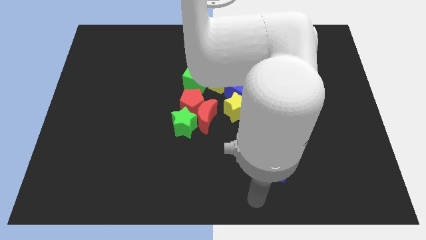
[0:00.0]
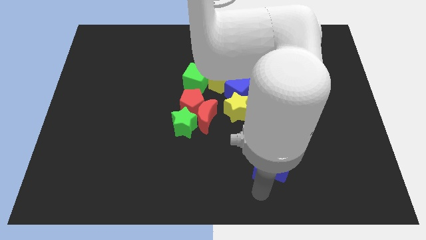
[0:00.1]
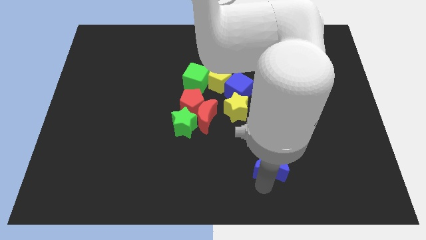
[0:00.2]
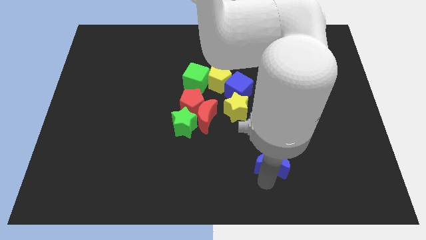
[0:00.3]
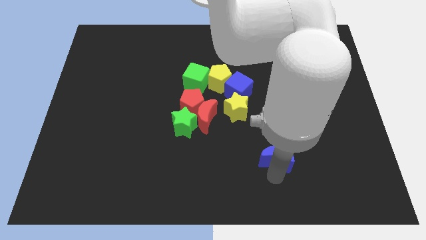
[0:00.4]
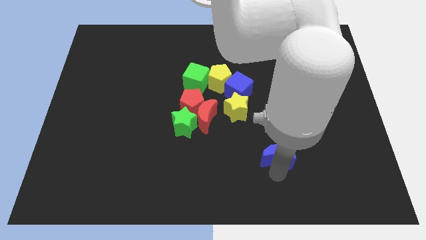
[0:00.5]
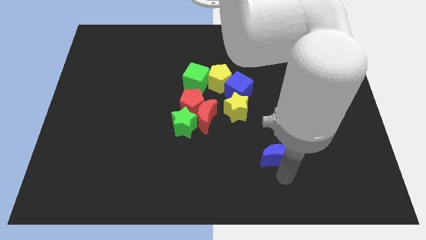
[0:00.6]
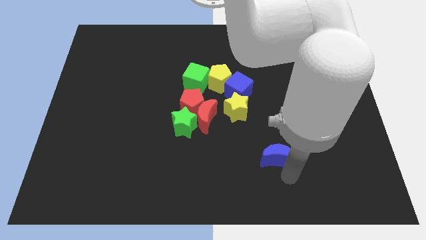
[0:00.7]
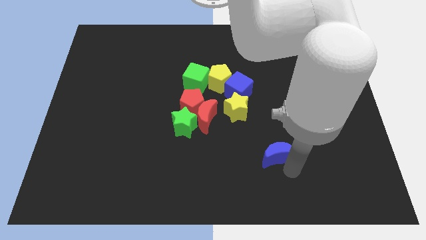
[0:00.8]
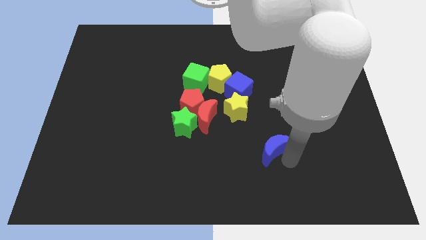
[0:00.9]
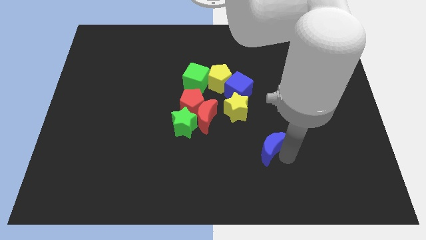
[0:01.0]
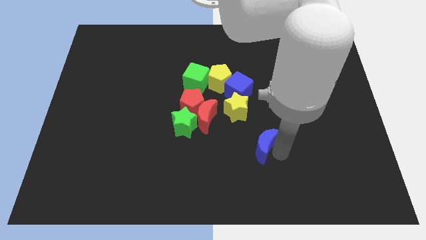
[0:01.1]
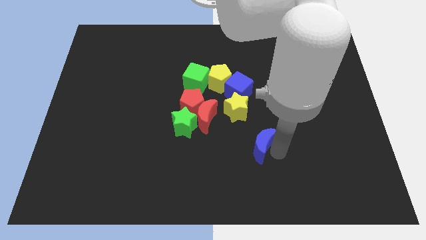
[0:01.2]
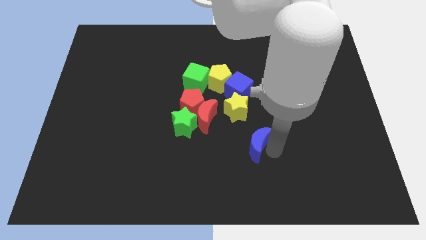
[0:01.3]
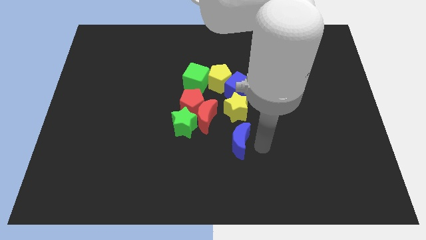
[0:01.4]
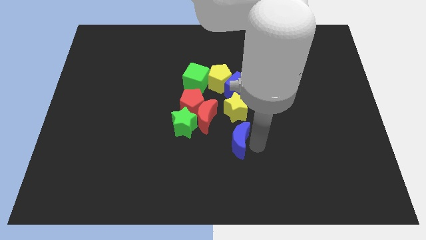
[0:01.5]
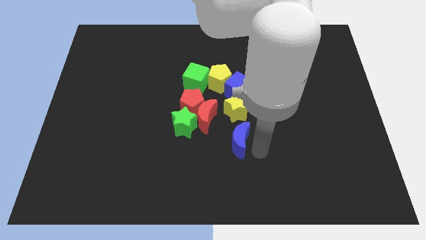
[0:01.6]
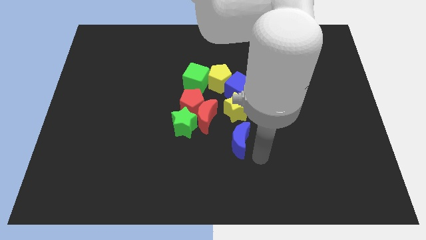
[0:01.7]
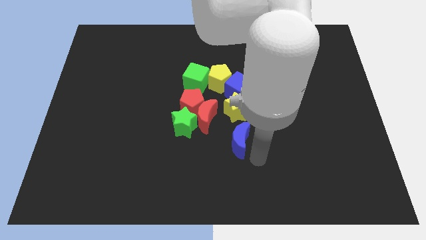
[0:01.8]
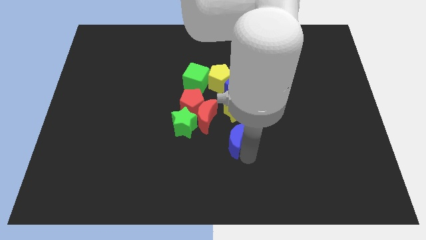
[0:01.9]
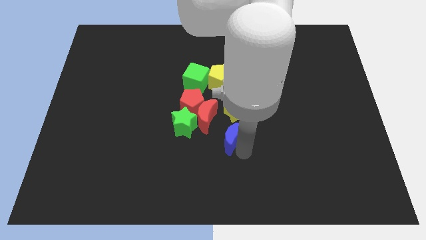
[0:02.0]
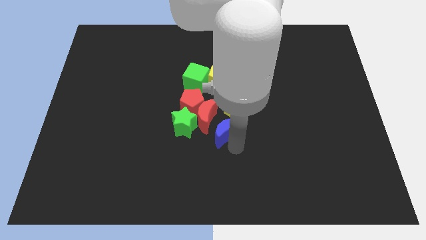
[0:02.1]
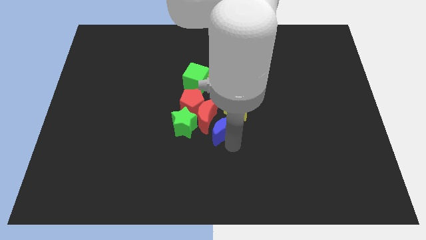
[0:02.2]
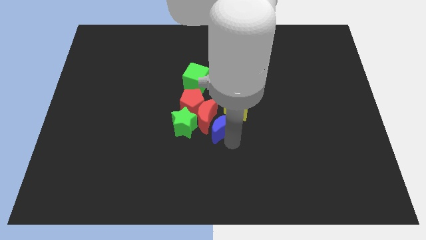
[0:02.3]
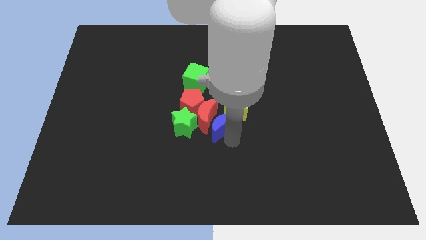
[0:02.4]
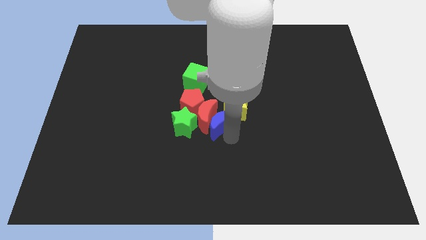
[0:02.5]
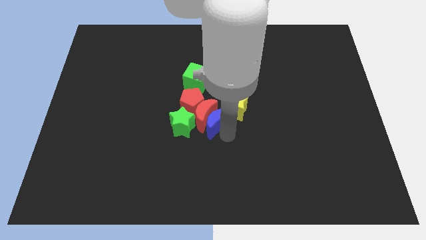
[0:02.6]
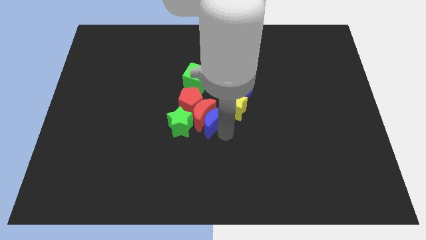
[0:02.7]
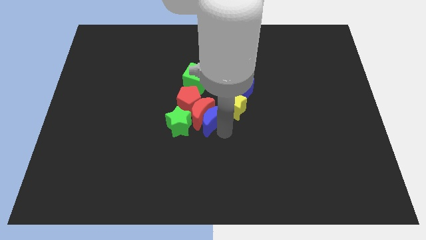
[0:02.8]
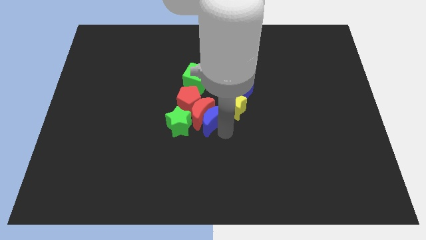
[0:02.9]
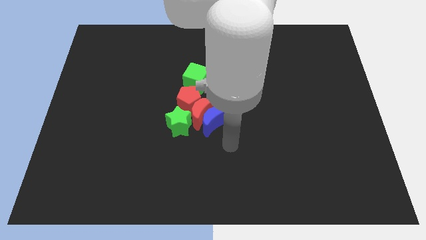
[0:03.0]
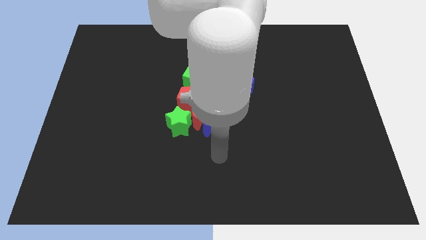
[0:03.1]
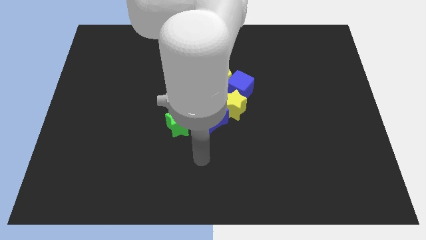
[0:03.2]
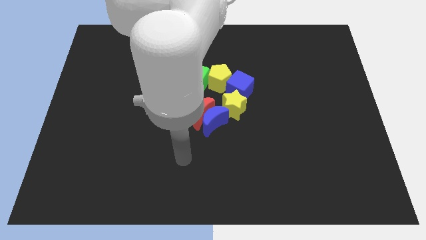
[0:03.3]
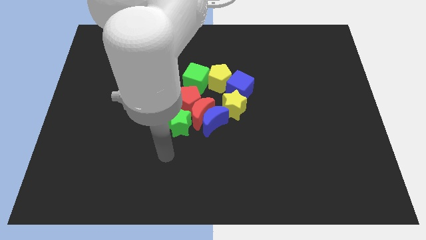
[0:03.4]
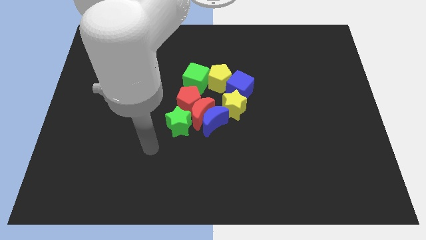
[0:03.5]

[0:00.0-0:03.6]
push the blue crescent close to the red crescent and yellow star

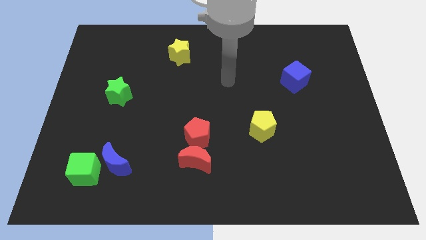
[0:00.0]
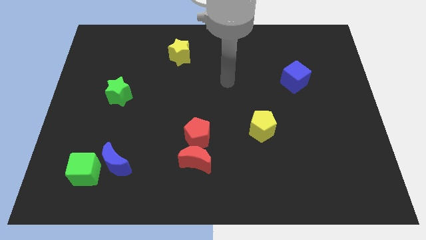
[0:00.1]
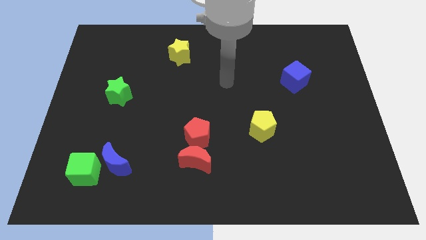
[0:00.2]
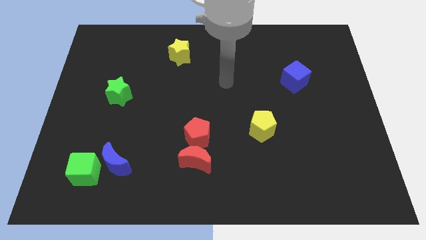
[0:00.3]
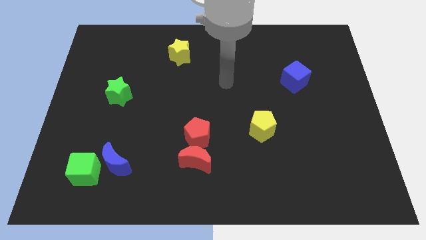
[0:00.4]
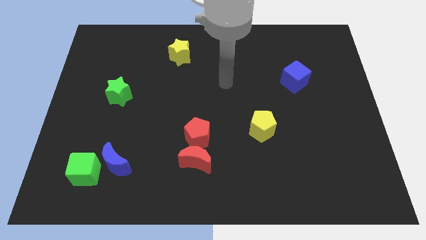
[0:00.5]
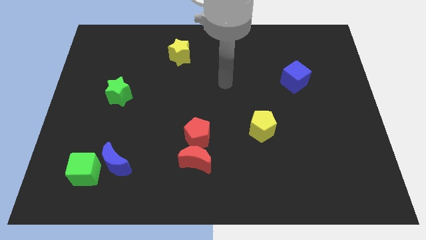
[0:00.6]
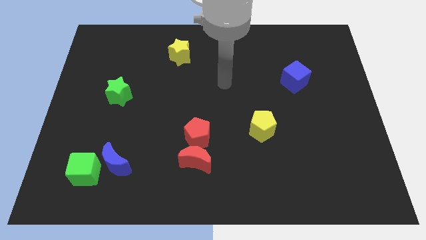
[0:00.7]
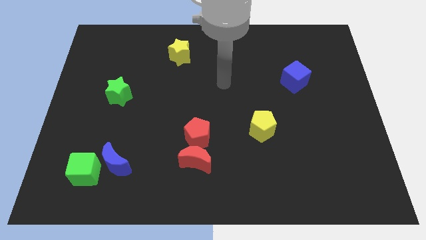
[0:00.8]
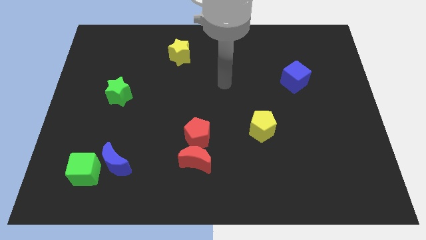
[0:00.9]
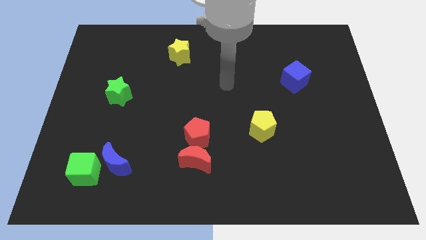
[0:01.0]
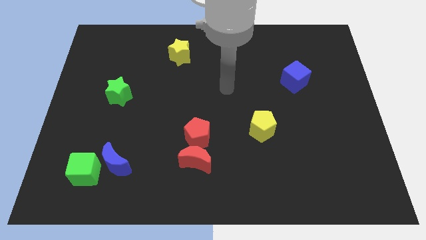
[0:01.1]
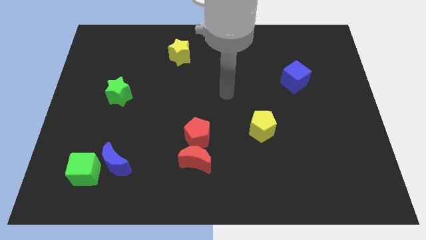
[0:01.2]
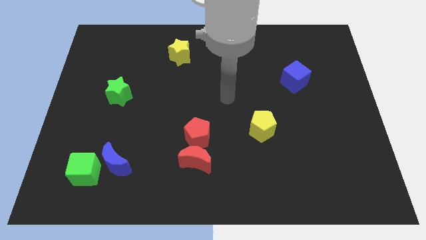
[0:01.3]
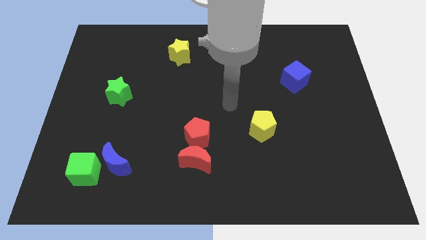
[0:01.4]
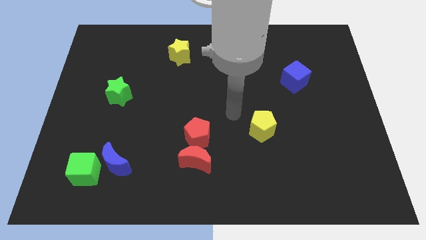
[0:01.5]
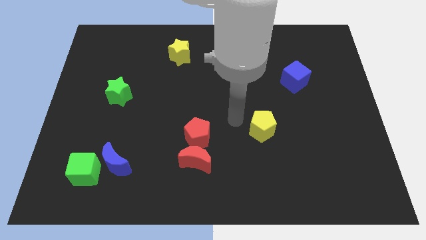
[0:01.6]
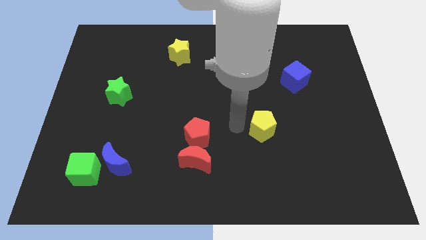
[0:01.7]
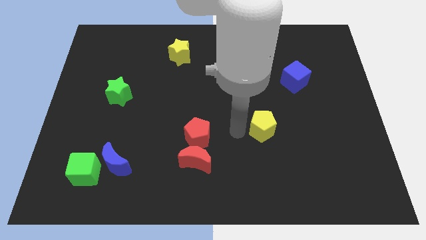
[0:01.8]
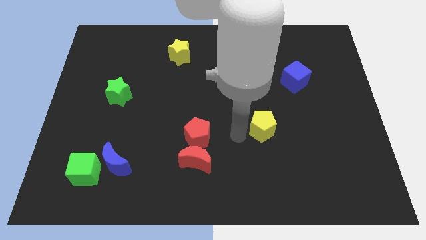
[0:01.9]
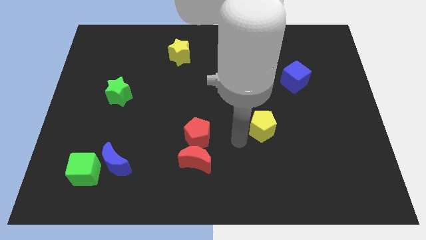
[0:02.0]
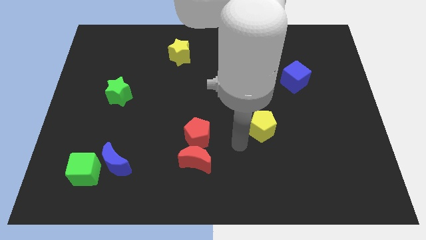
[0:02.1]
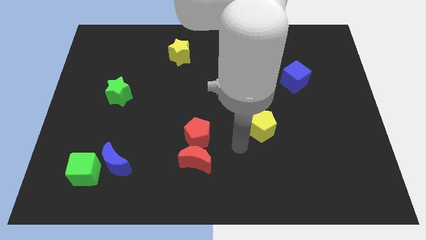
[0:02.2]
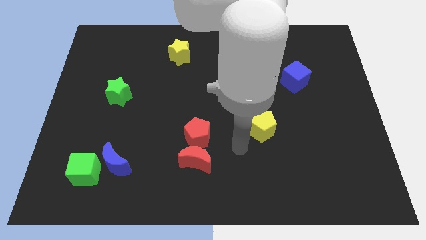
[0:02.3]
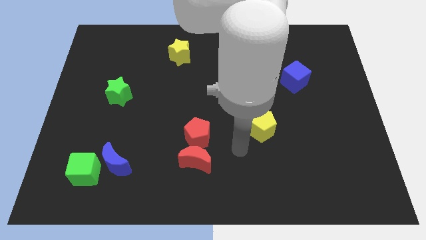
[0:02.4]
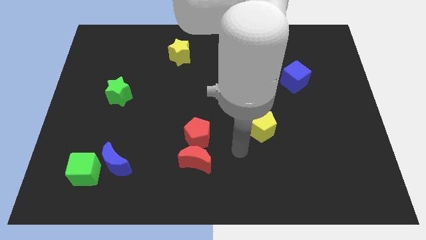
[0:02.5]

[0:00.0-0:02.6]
move the arm towards bottom center of the board

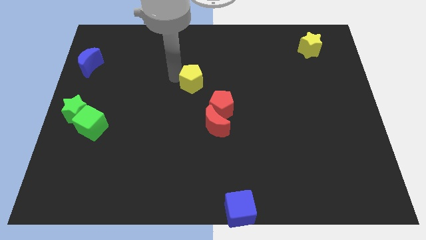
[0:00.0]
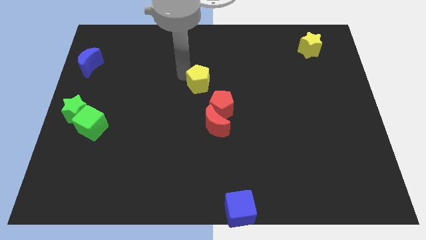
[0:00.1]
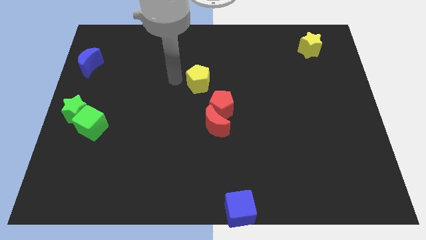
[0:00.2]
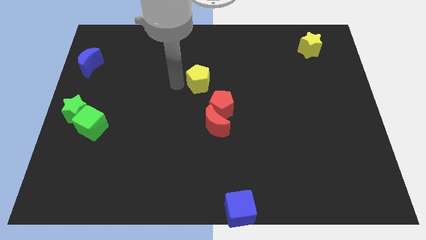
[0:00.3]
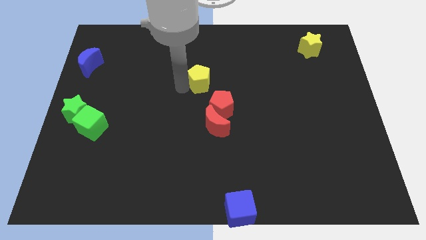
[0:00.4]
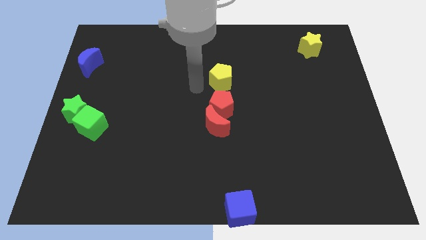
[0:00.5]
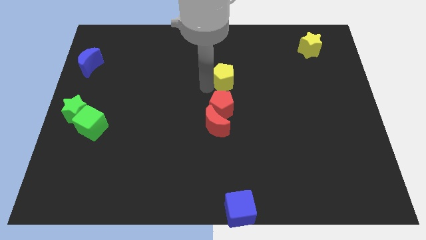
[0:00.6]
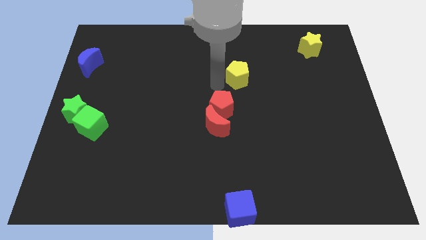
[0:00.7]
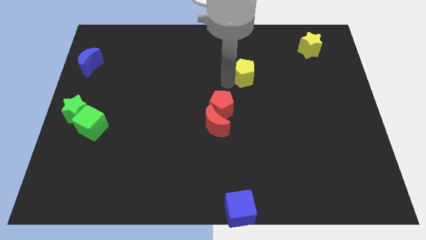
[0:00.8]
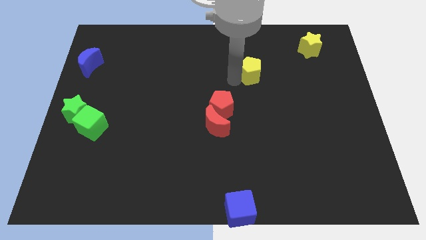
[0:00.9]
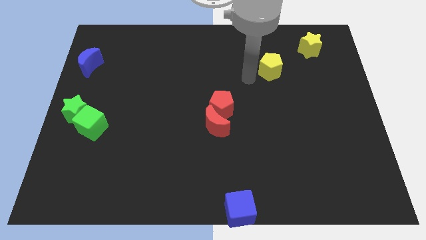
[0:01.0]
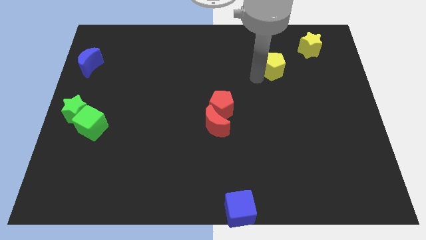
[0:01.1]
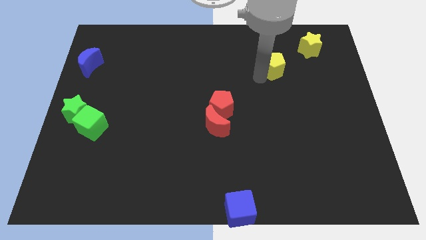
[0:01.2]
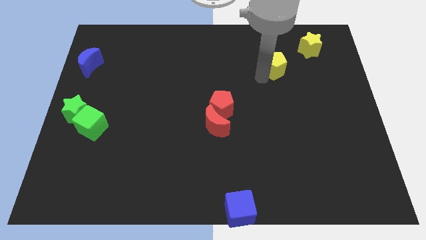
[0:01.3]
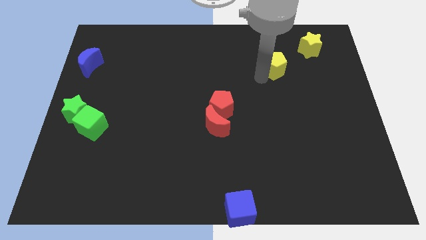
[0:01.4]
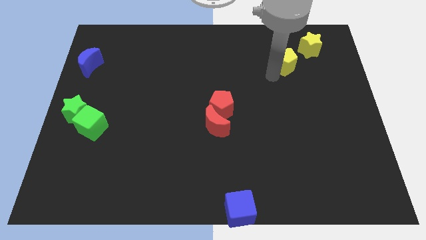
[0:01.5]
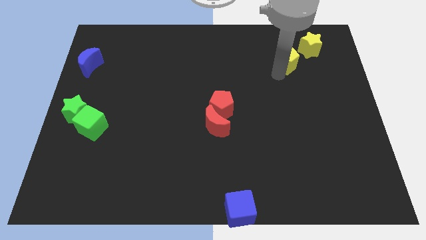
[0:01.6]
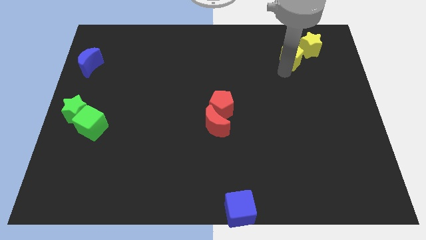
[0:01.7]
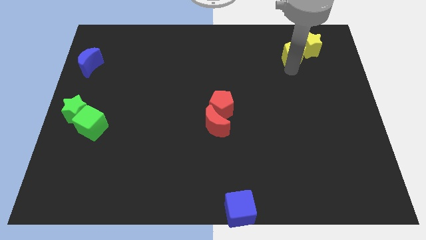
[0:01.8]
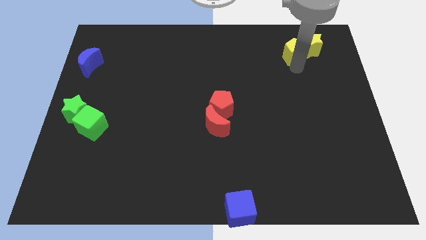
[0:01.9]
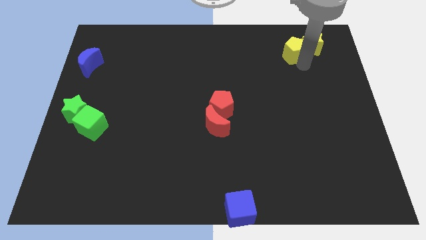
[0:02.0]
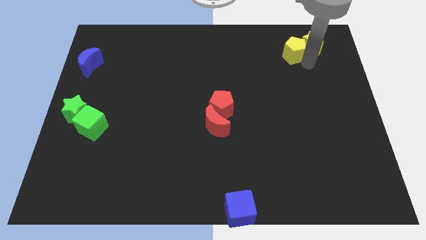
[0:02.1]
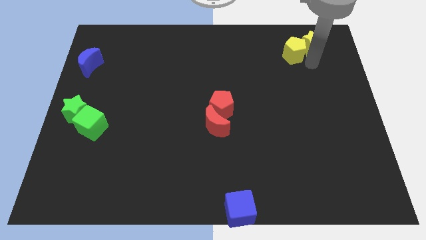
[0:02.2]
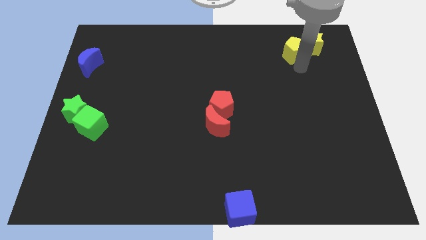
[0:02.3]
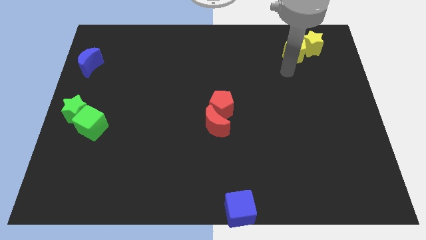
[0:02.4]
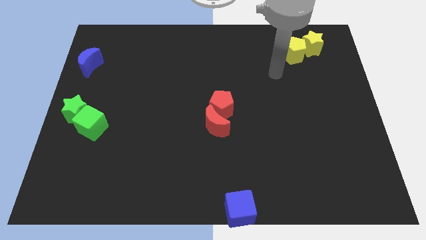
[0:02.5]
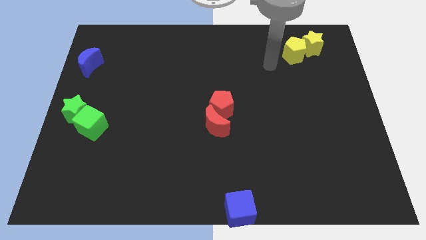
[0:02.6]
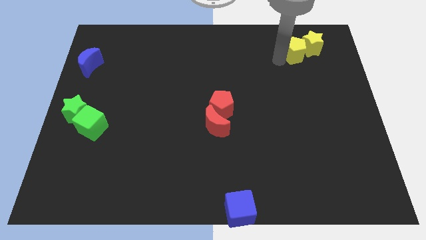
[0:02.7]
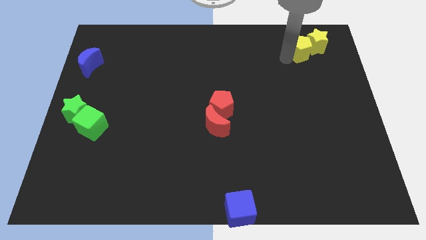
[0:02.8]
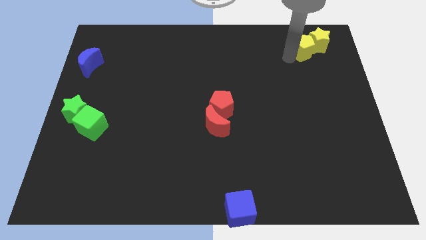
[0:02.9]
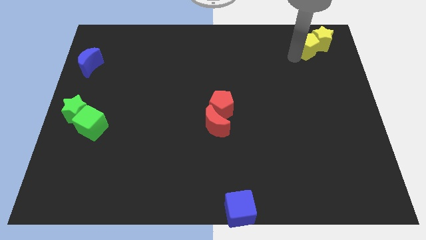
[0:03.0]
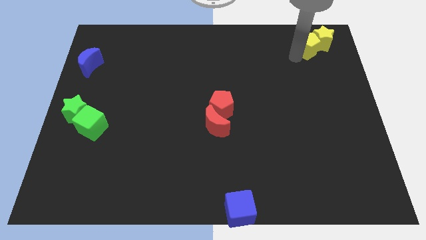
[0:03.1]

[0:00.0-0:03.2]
move yellow pentagon to the top right of the board
